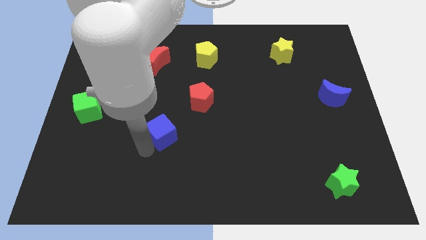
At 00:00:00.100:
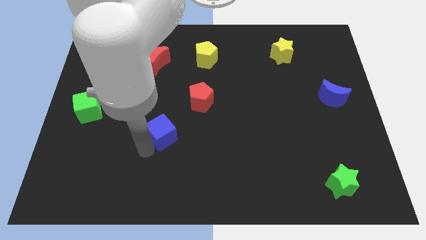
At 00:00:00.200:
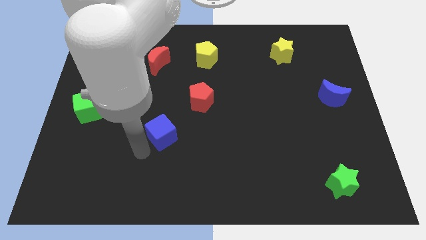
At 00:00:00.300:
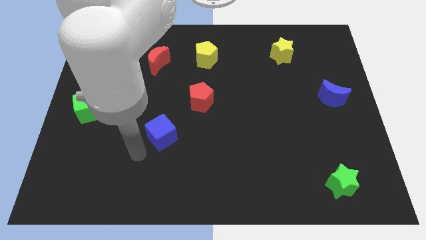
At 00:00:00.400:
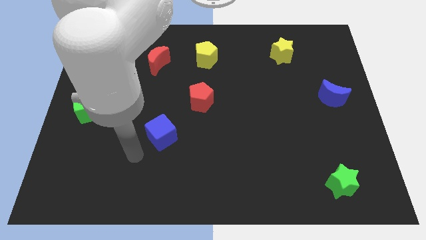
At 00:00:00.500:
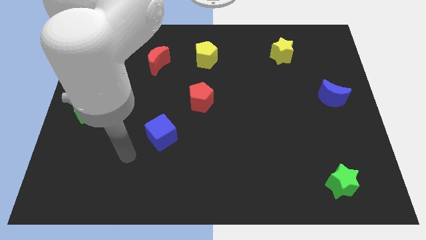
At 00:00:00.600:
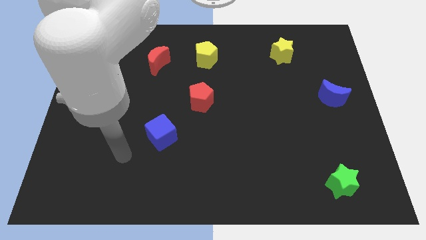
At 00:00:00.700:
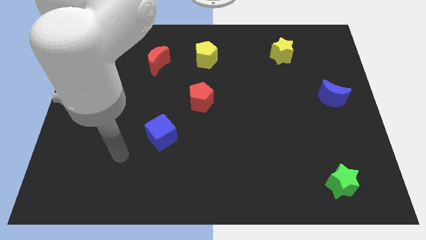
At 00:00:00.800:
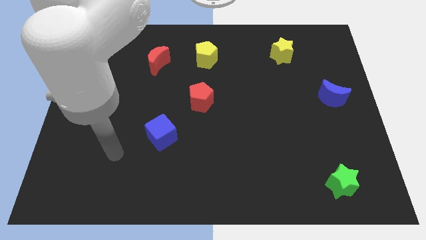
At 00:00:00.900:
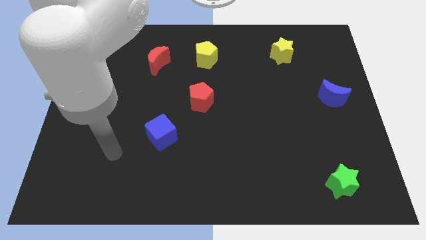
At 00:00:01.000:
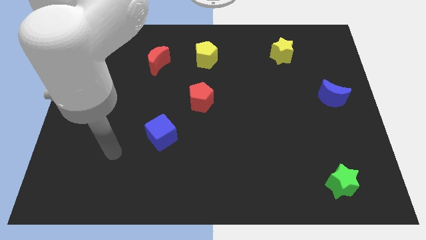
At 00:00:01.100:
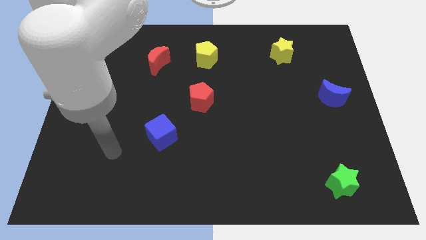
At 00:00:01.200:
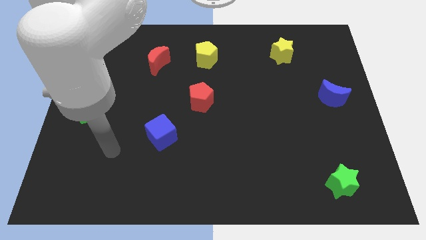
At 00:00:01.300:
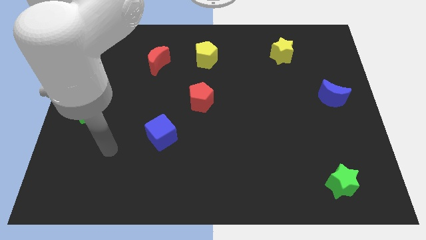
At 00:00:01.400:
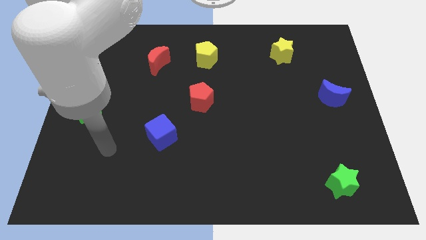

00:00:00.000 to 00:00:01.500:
move the arm away from the blue cube

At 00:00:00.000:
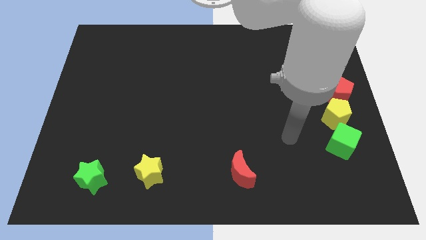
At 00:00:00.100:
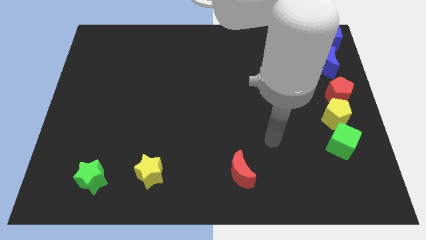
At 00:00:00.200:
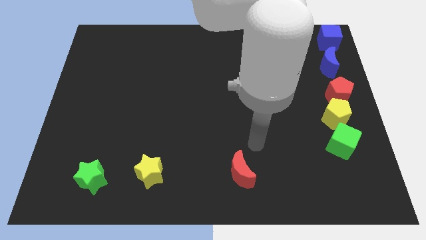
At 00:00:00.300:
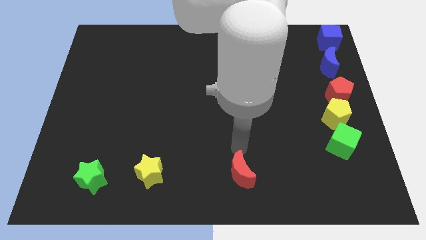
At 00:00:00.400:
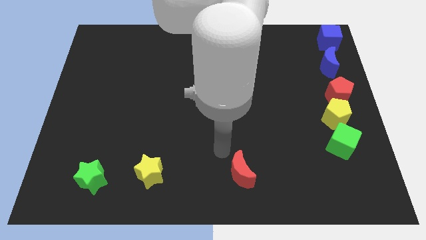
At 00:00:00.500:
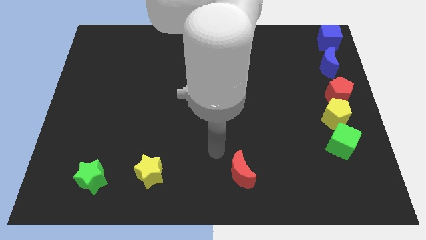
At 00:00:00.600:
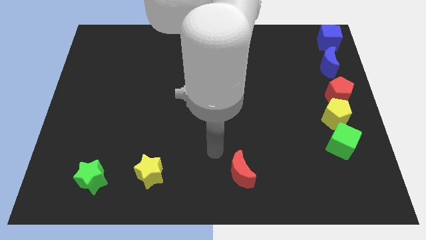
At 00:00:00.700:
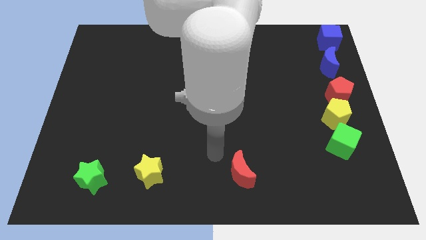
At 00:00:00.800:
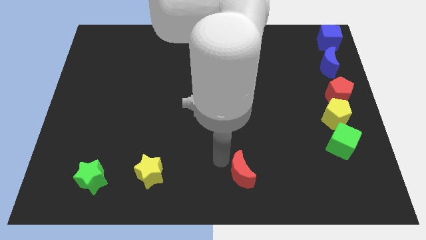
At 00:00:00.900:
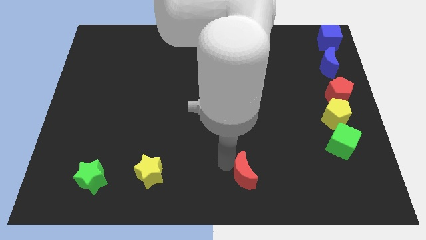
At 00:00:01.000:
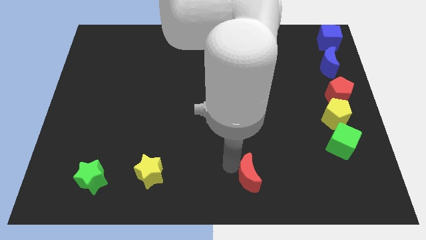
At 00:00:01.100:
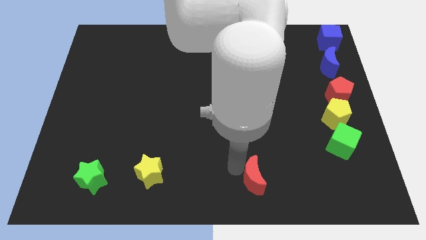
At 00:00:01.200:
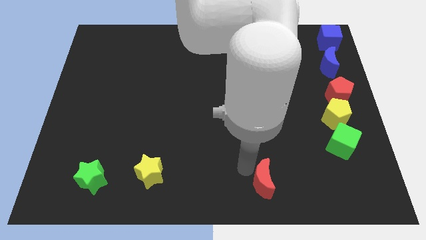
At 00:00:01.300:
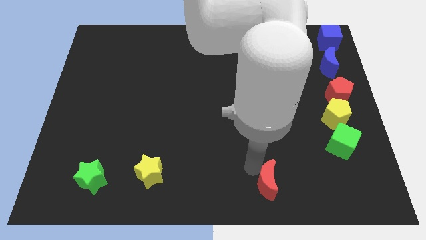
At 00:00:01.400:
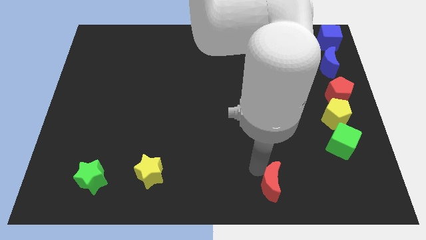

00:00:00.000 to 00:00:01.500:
drag the red moon to the right side

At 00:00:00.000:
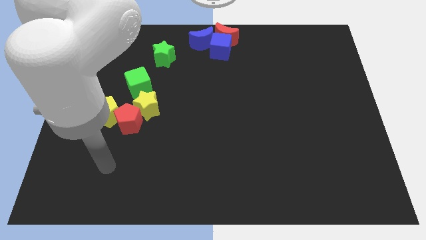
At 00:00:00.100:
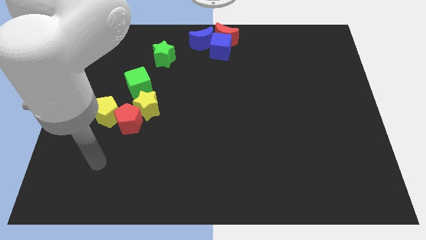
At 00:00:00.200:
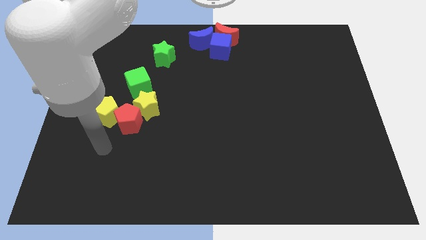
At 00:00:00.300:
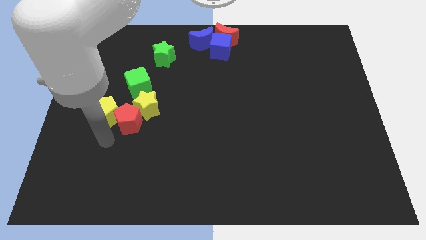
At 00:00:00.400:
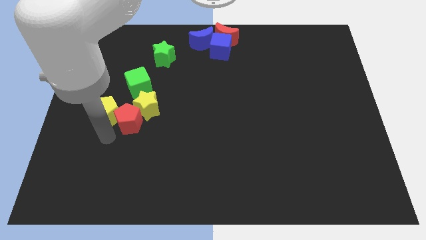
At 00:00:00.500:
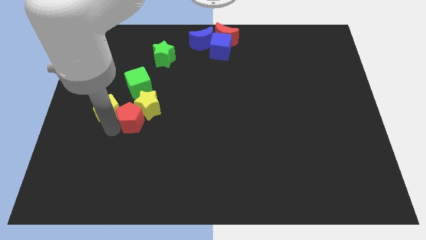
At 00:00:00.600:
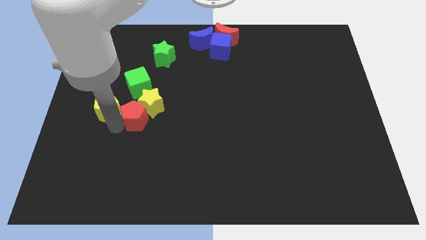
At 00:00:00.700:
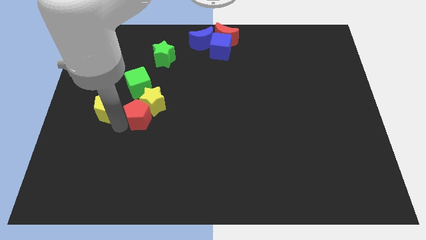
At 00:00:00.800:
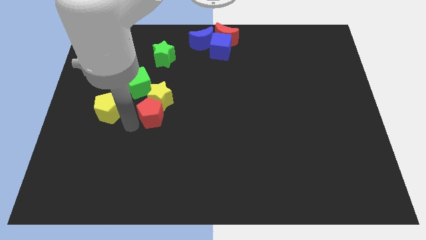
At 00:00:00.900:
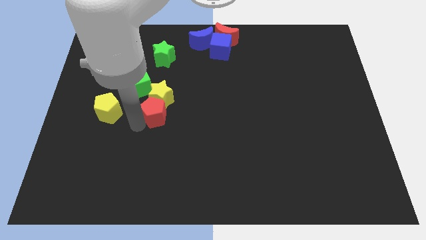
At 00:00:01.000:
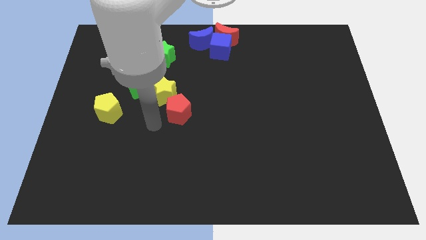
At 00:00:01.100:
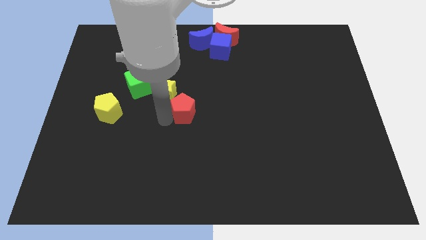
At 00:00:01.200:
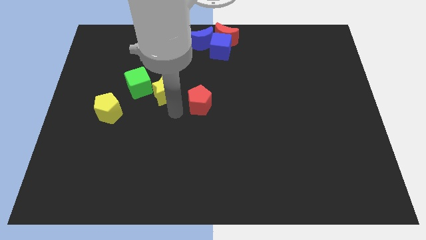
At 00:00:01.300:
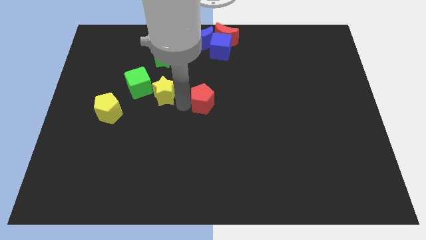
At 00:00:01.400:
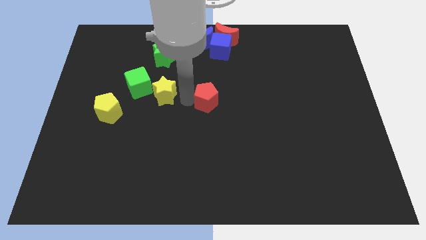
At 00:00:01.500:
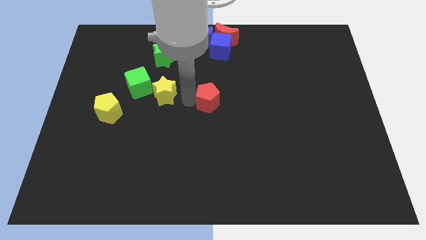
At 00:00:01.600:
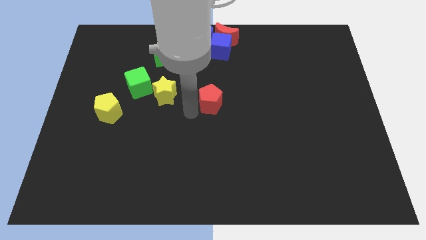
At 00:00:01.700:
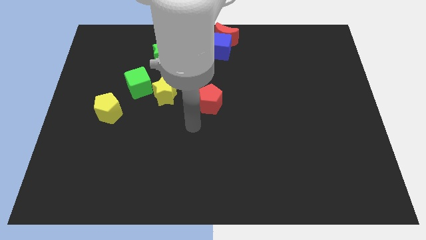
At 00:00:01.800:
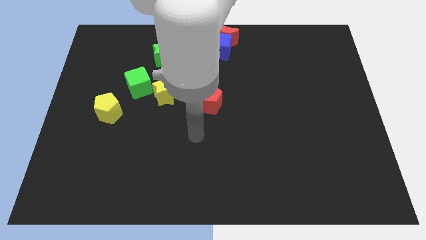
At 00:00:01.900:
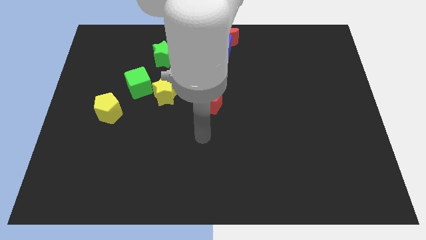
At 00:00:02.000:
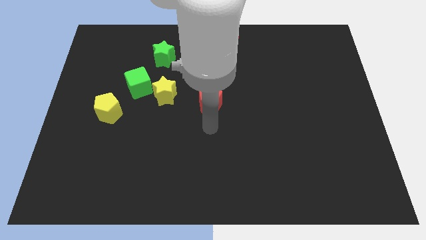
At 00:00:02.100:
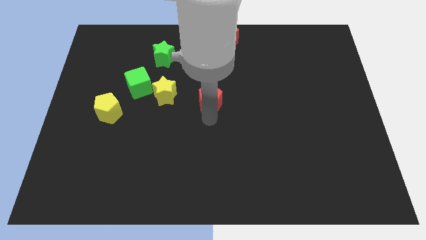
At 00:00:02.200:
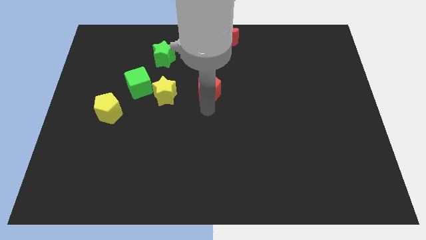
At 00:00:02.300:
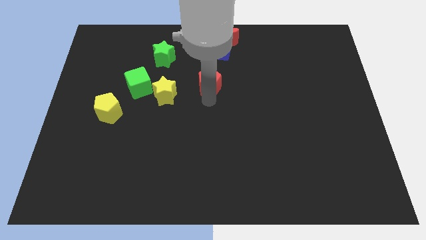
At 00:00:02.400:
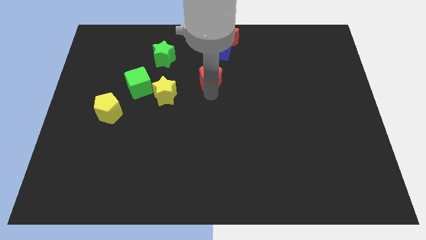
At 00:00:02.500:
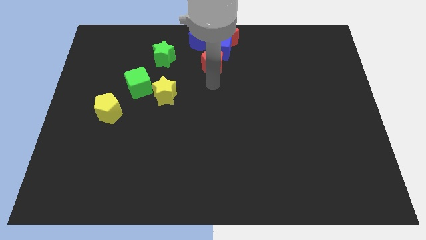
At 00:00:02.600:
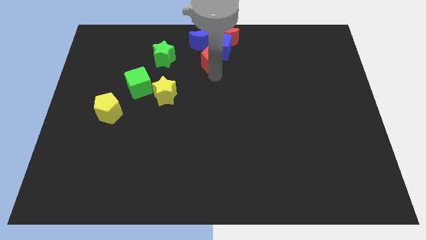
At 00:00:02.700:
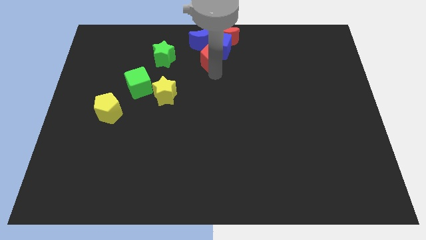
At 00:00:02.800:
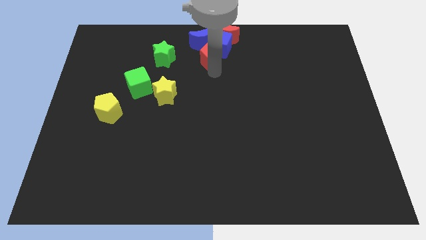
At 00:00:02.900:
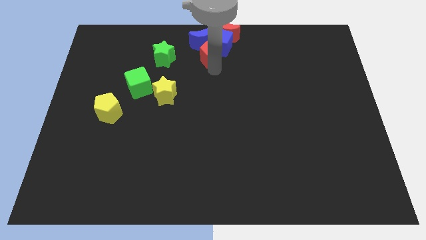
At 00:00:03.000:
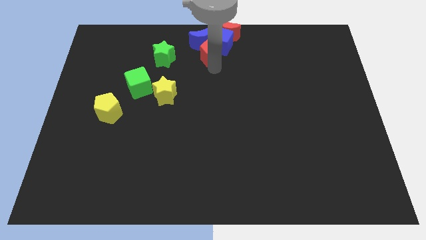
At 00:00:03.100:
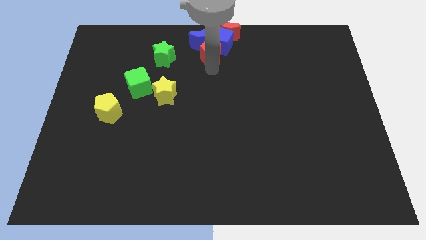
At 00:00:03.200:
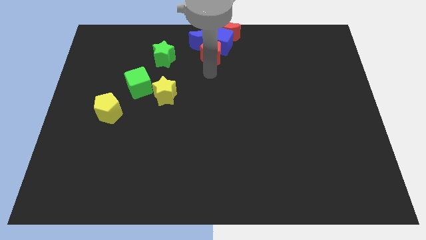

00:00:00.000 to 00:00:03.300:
slide the red pentagon into the group of blocks

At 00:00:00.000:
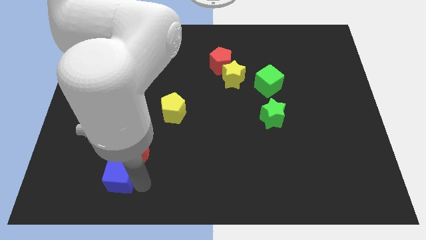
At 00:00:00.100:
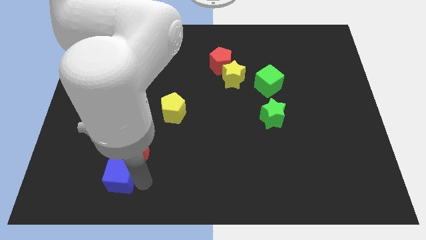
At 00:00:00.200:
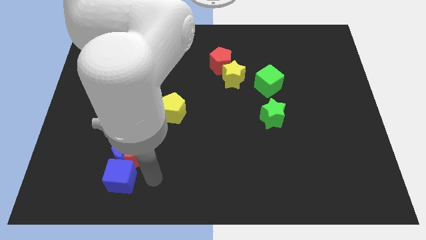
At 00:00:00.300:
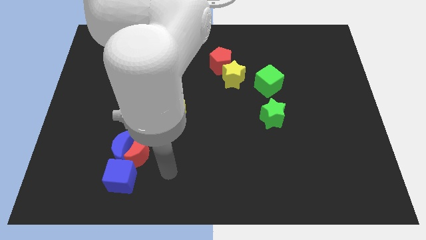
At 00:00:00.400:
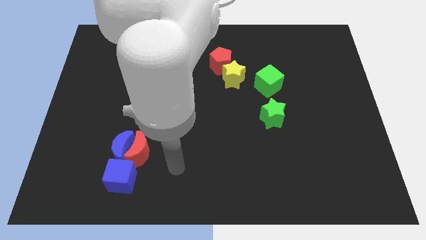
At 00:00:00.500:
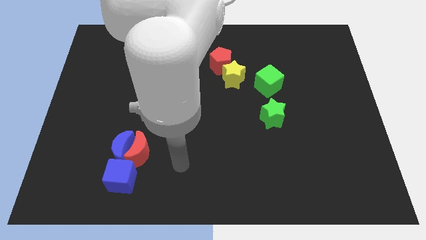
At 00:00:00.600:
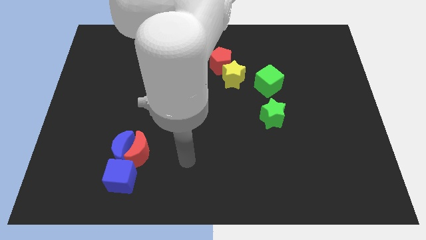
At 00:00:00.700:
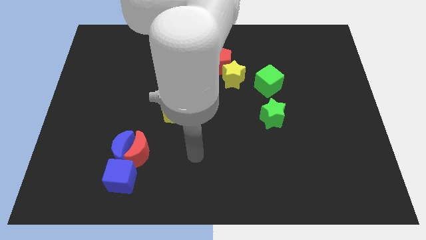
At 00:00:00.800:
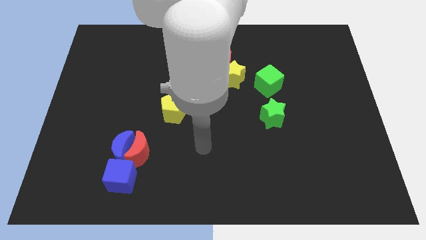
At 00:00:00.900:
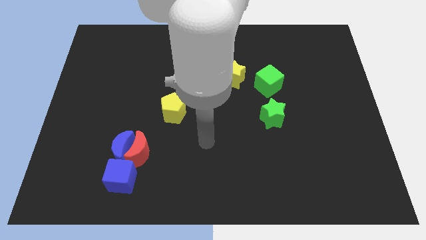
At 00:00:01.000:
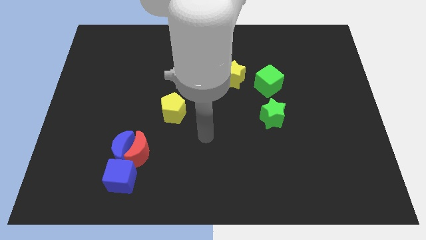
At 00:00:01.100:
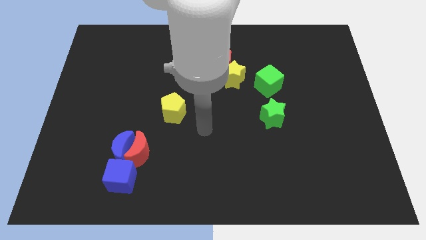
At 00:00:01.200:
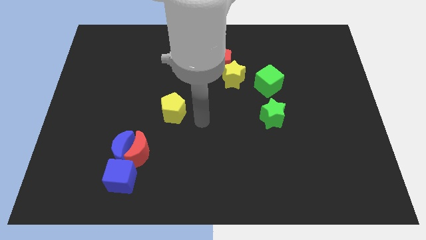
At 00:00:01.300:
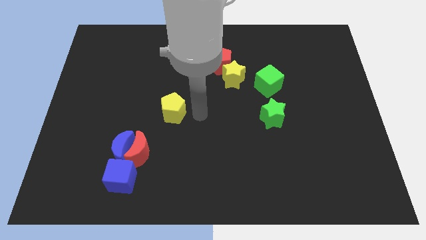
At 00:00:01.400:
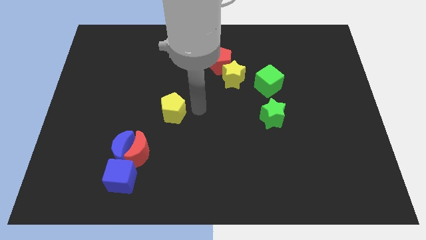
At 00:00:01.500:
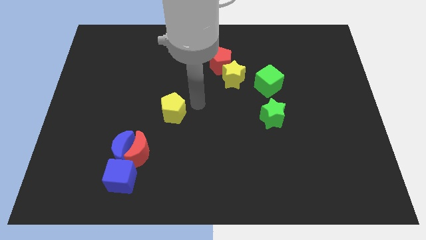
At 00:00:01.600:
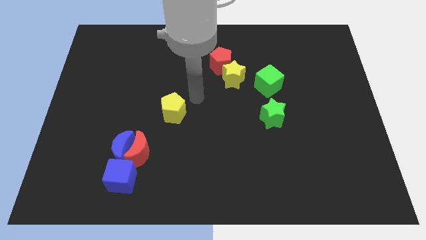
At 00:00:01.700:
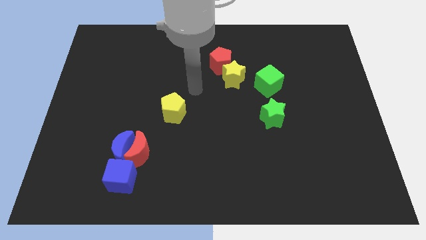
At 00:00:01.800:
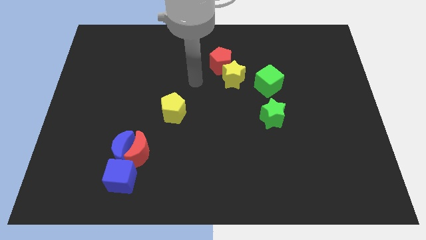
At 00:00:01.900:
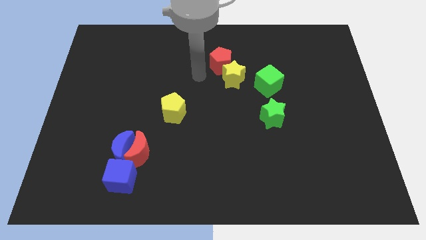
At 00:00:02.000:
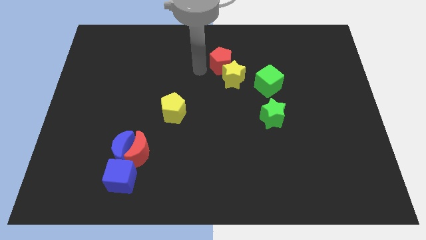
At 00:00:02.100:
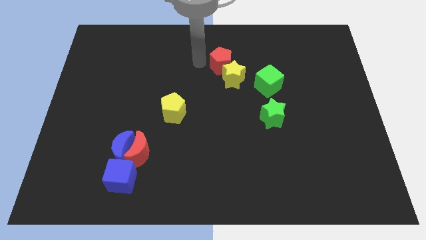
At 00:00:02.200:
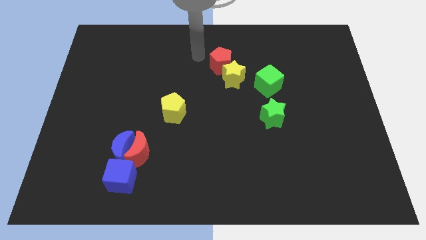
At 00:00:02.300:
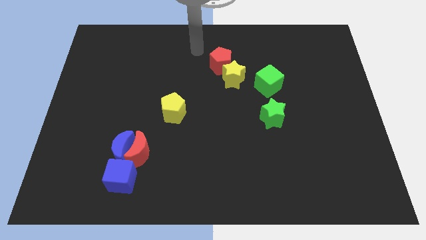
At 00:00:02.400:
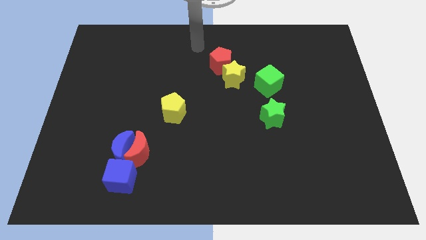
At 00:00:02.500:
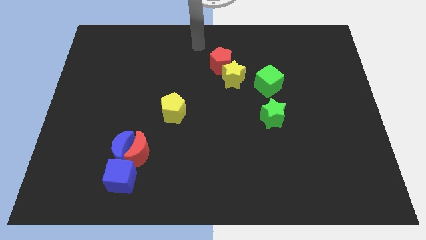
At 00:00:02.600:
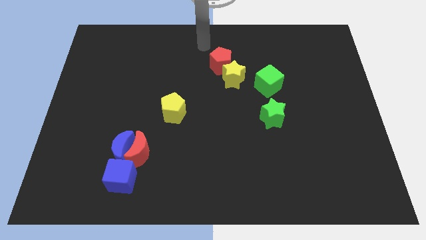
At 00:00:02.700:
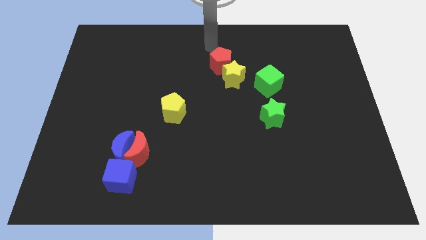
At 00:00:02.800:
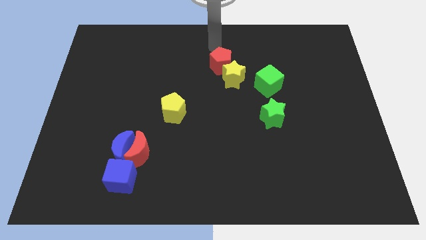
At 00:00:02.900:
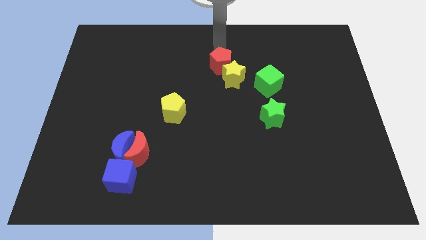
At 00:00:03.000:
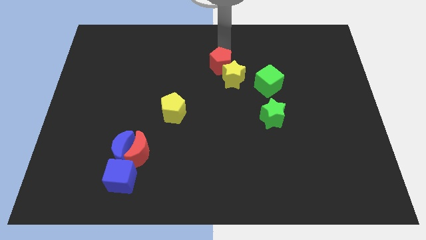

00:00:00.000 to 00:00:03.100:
move your arm to the top of the red pentagon
